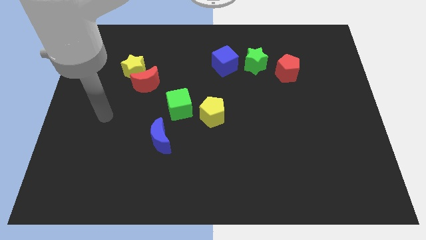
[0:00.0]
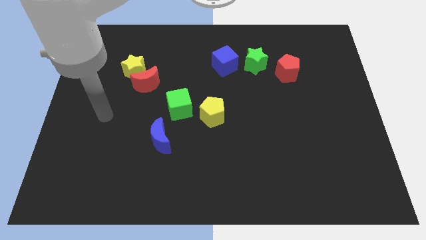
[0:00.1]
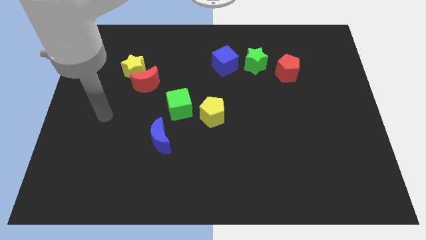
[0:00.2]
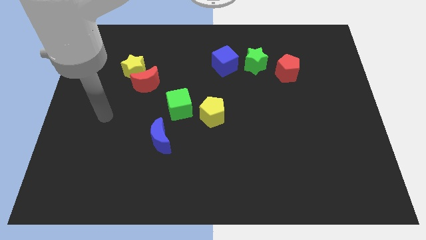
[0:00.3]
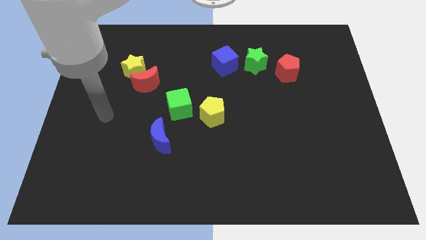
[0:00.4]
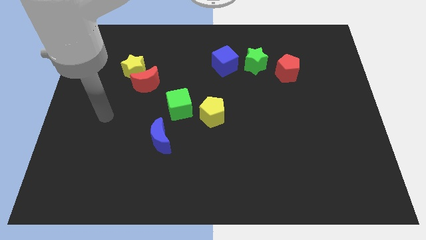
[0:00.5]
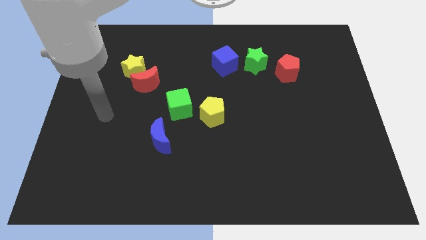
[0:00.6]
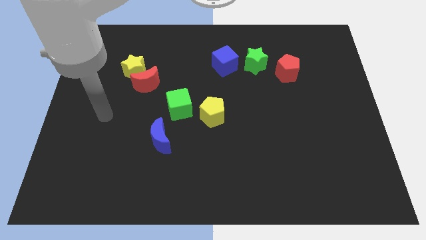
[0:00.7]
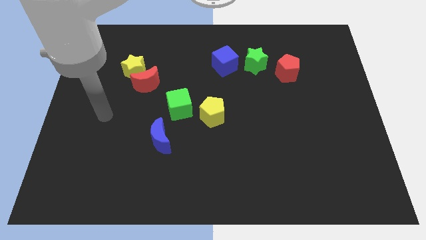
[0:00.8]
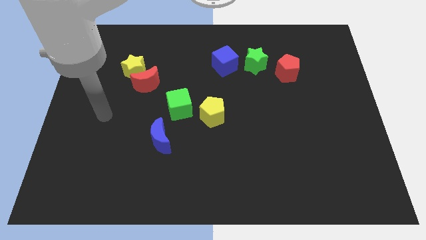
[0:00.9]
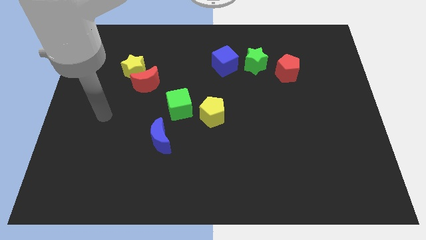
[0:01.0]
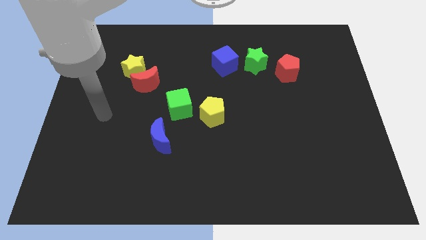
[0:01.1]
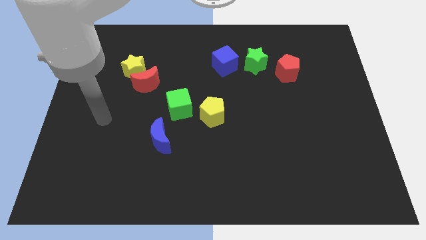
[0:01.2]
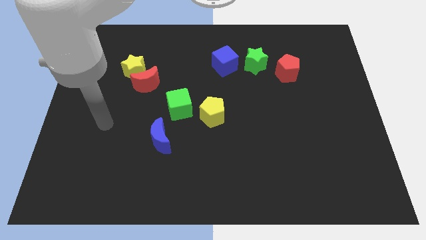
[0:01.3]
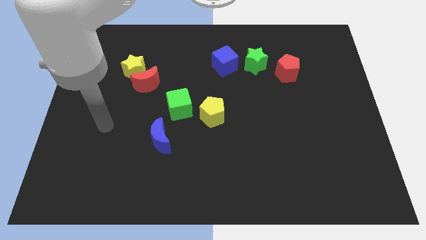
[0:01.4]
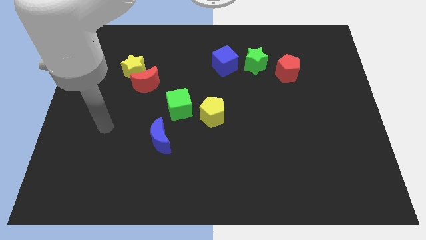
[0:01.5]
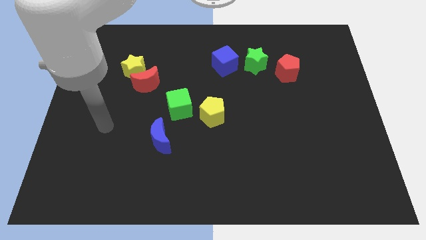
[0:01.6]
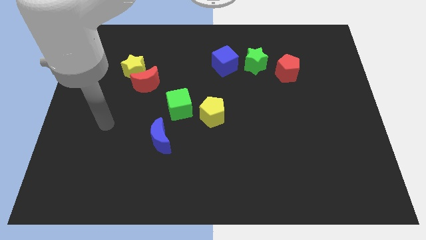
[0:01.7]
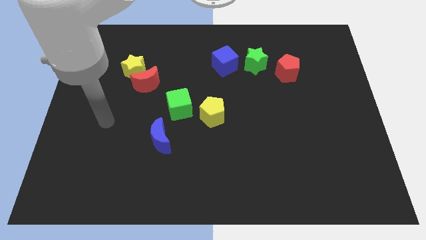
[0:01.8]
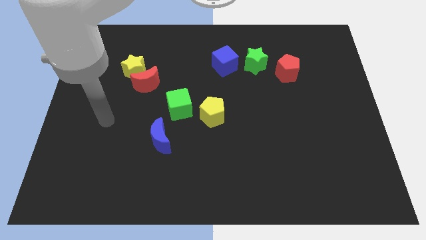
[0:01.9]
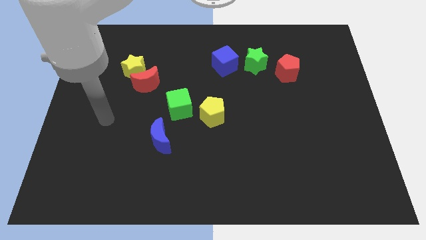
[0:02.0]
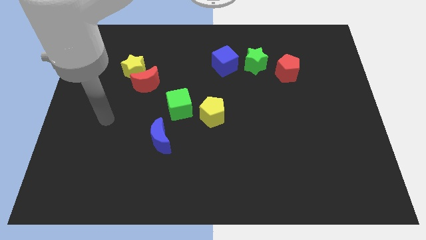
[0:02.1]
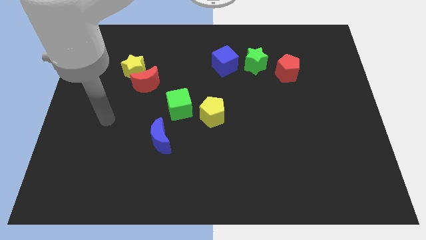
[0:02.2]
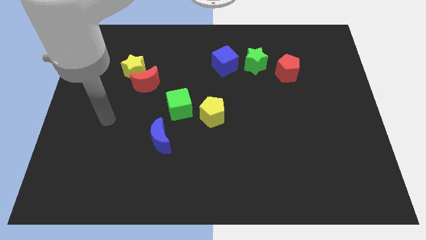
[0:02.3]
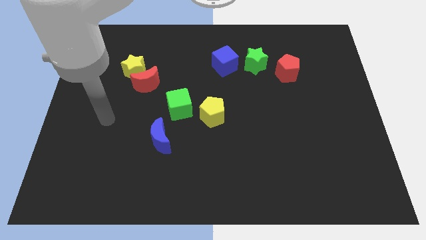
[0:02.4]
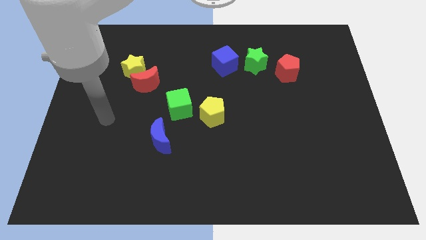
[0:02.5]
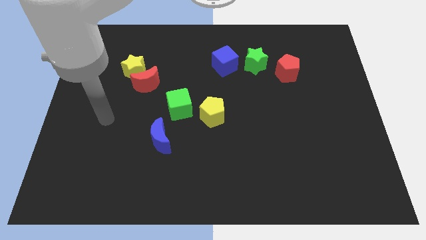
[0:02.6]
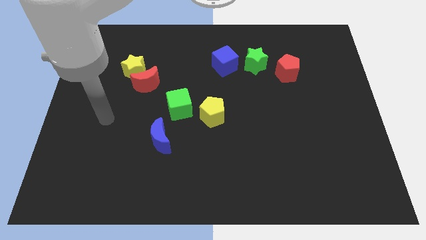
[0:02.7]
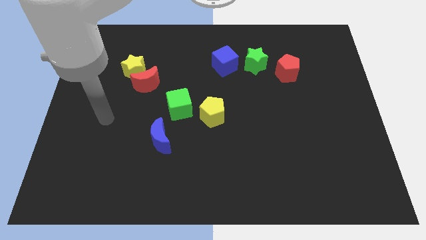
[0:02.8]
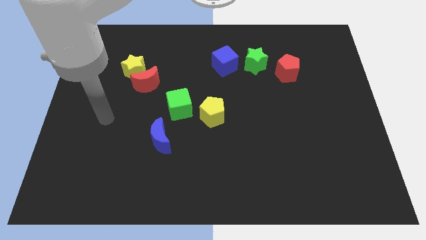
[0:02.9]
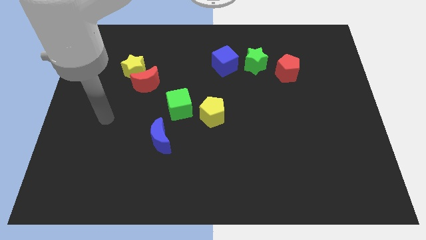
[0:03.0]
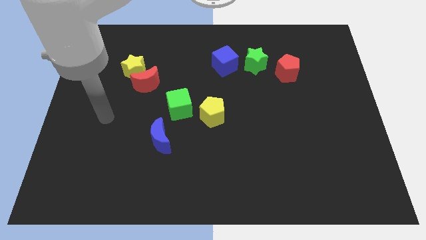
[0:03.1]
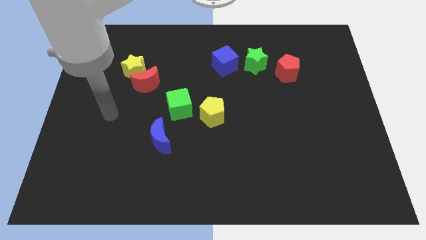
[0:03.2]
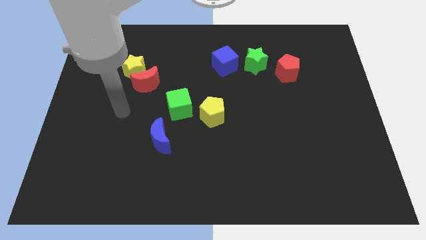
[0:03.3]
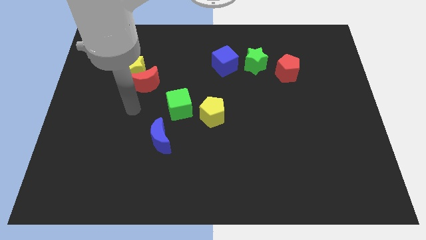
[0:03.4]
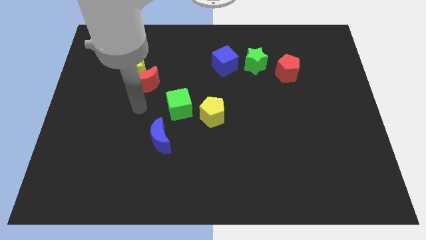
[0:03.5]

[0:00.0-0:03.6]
slide your arm towards the green cube

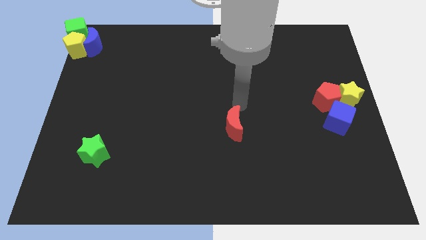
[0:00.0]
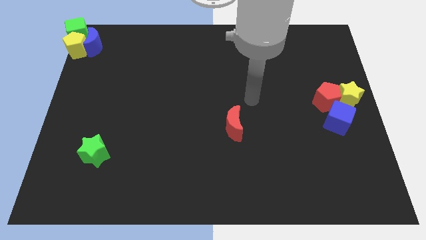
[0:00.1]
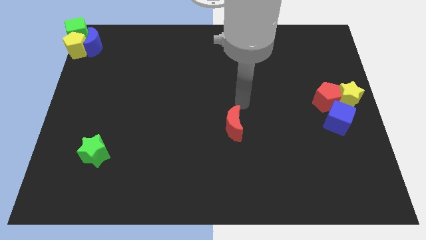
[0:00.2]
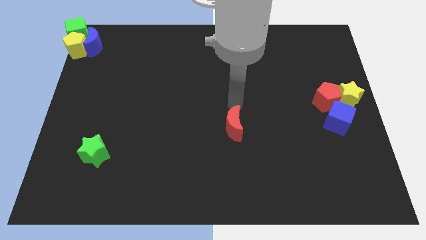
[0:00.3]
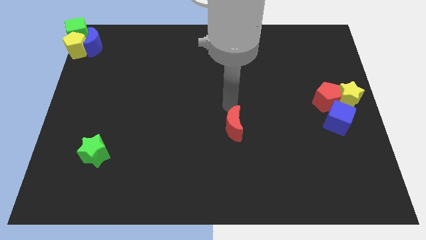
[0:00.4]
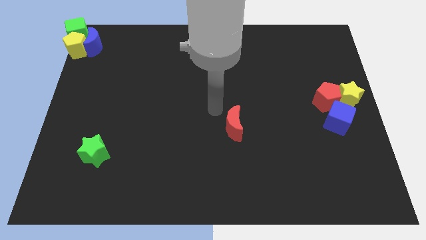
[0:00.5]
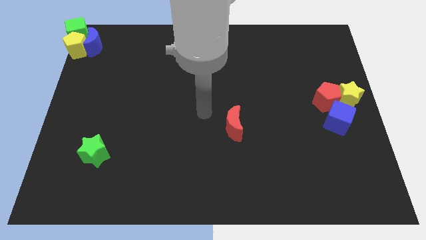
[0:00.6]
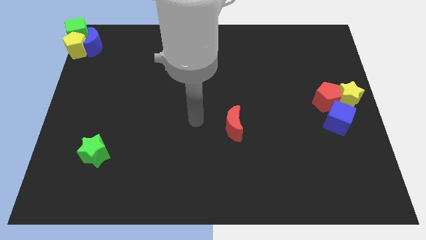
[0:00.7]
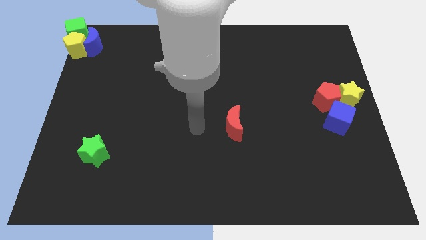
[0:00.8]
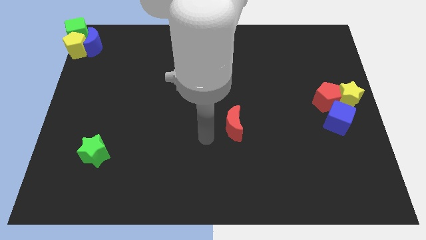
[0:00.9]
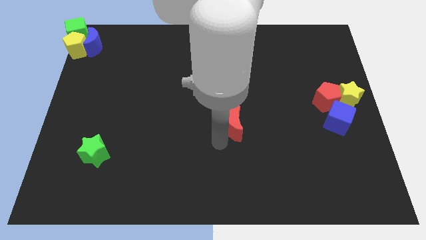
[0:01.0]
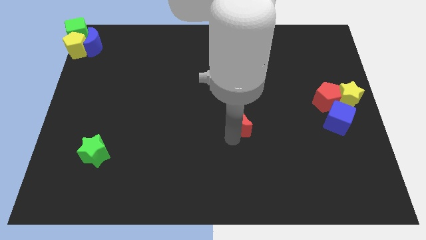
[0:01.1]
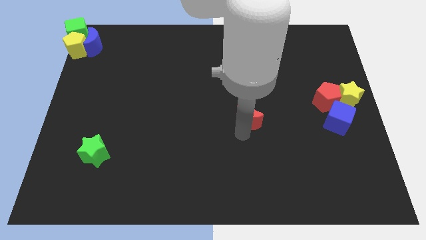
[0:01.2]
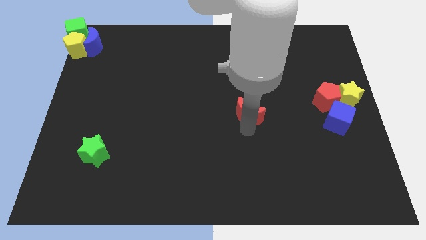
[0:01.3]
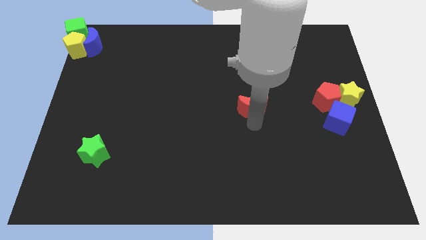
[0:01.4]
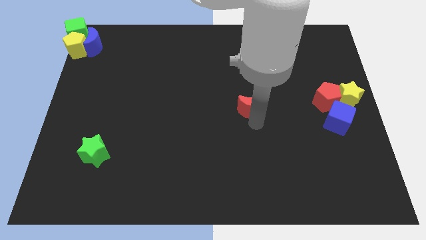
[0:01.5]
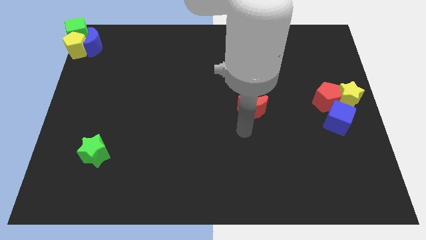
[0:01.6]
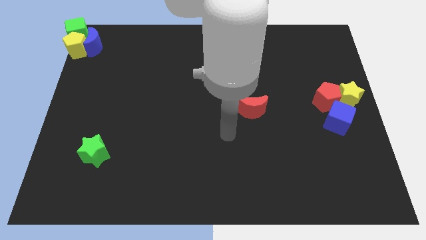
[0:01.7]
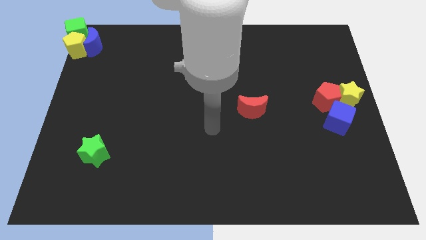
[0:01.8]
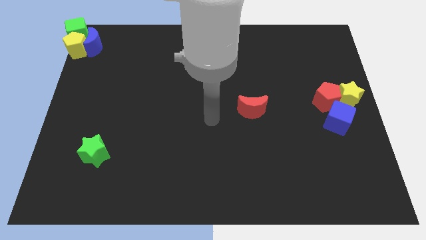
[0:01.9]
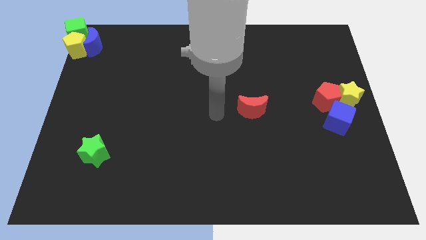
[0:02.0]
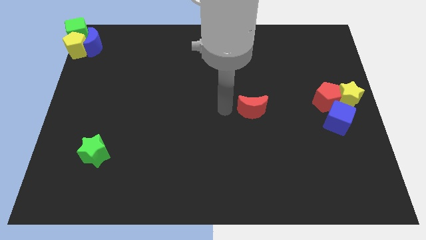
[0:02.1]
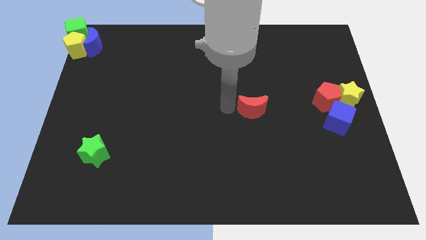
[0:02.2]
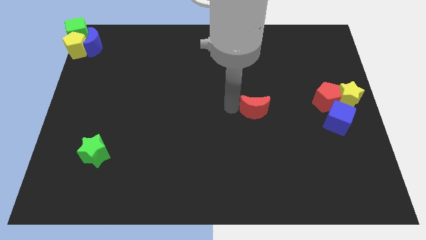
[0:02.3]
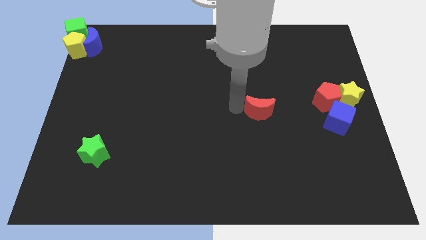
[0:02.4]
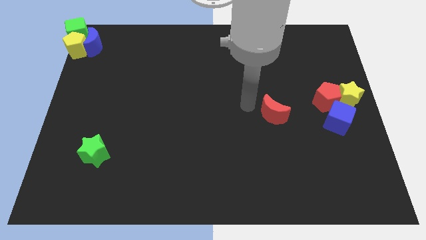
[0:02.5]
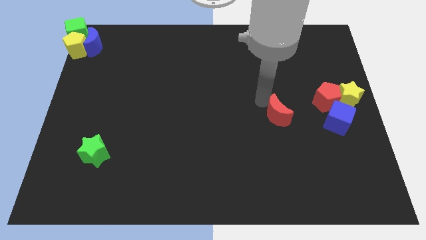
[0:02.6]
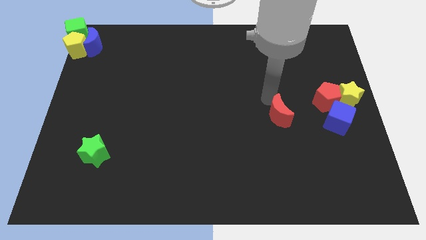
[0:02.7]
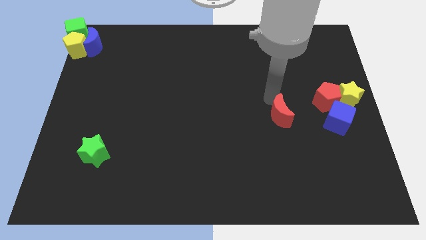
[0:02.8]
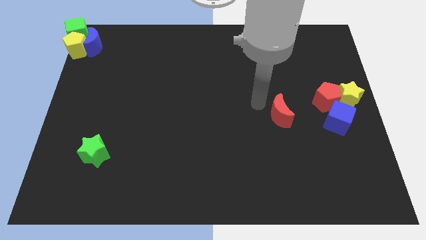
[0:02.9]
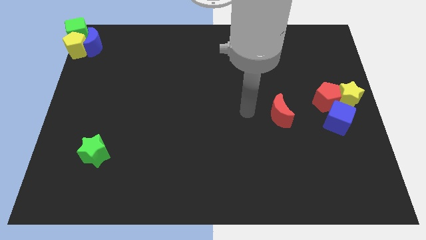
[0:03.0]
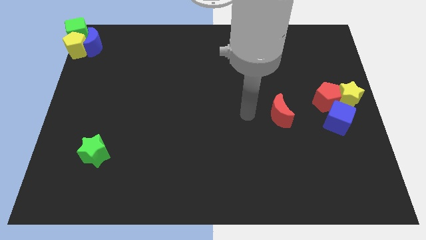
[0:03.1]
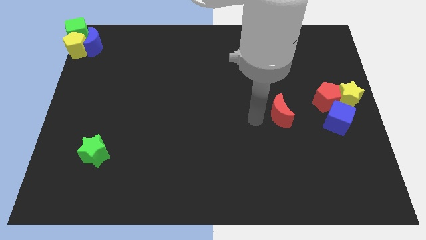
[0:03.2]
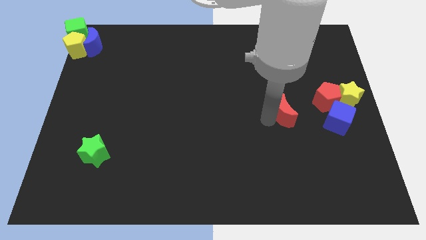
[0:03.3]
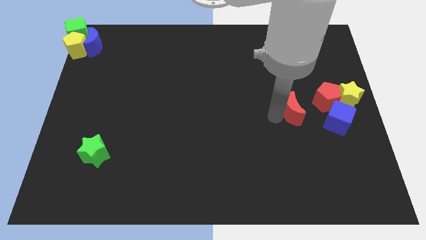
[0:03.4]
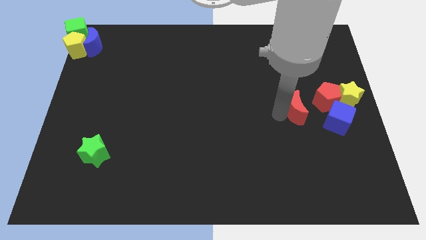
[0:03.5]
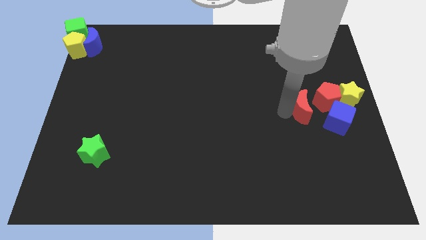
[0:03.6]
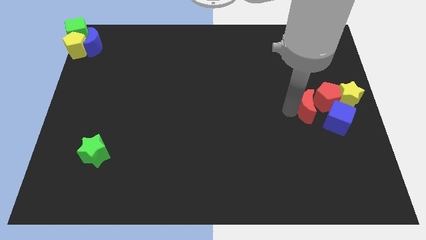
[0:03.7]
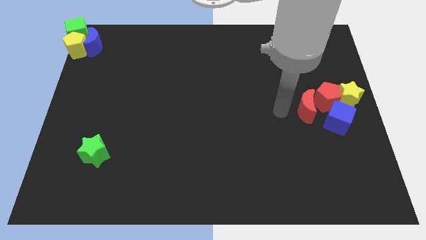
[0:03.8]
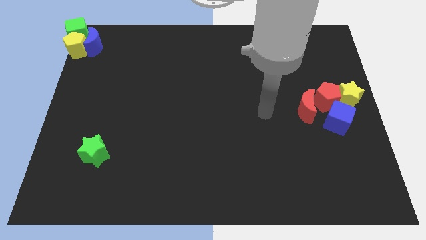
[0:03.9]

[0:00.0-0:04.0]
place red crescent beside red pentagon

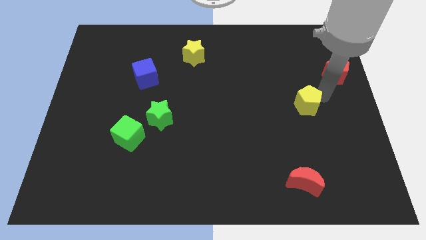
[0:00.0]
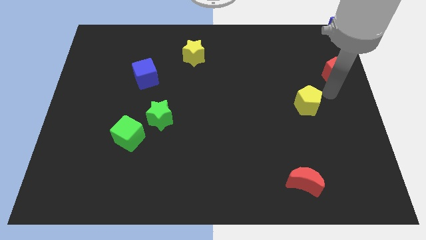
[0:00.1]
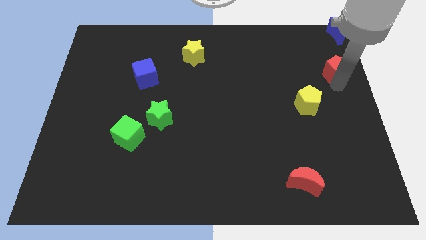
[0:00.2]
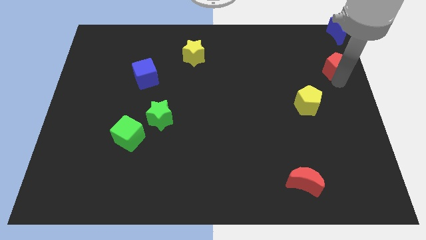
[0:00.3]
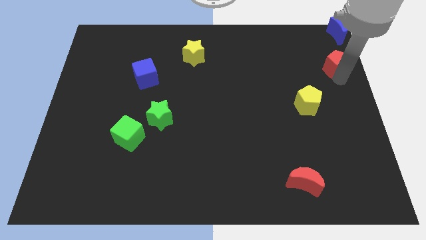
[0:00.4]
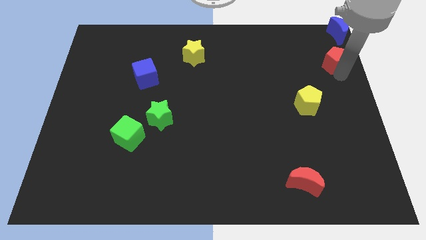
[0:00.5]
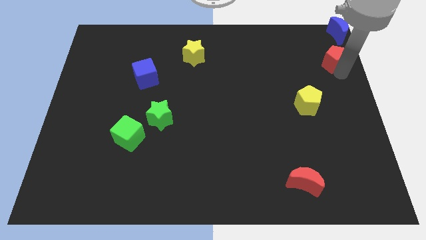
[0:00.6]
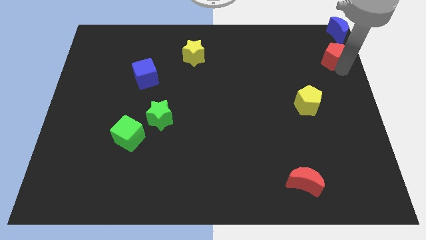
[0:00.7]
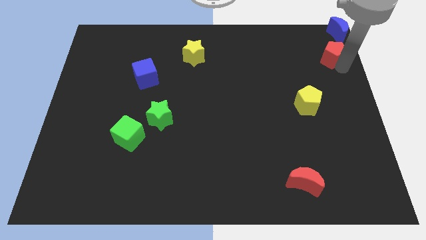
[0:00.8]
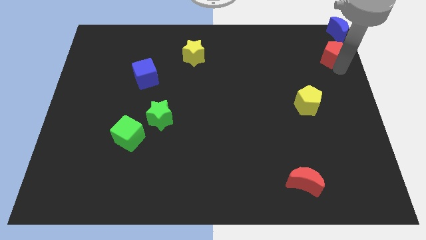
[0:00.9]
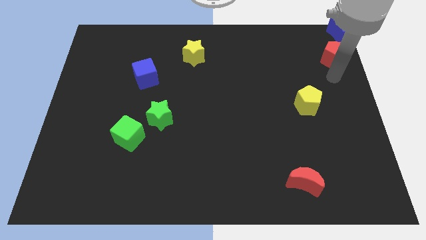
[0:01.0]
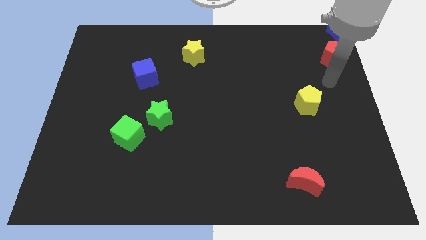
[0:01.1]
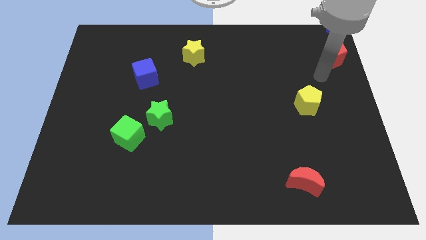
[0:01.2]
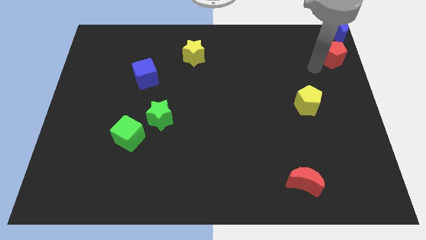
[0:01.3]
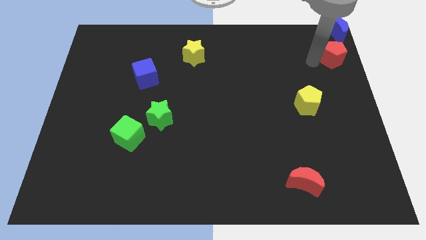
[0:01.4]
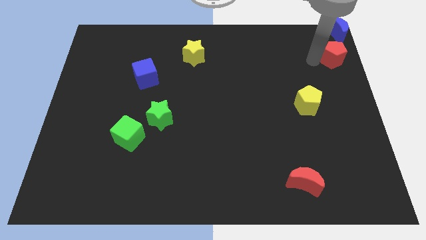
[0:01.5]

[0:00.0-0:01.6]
move the red pentagon below the blue crescent
